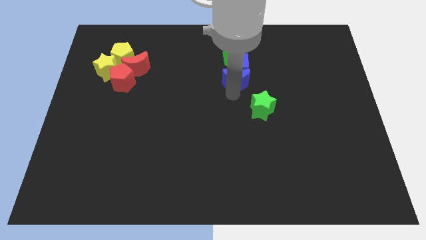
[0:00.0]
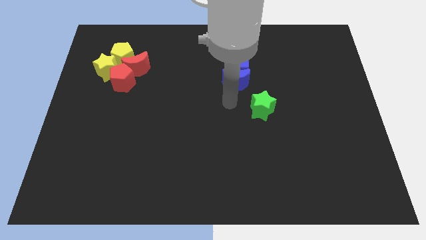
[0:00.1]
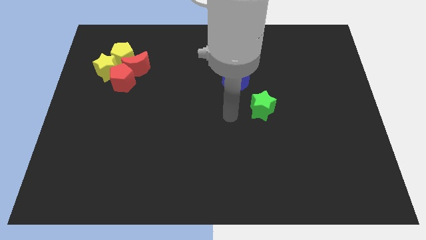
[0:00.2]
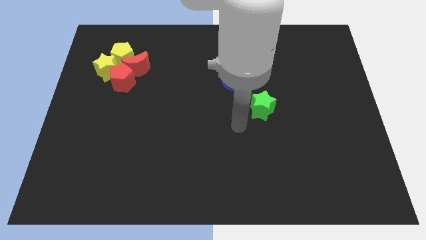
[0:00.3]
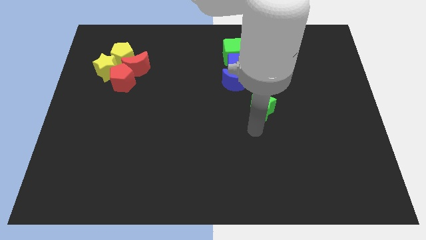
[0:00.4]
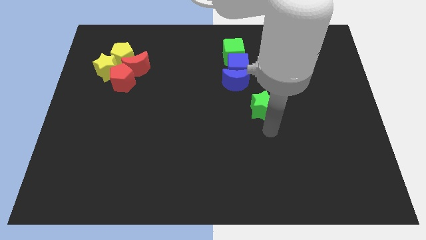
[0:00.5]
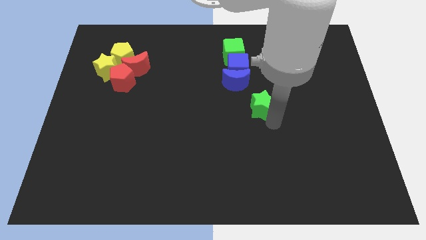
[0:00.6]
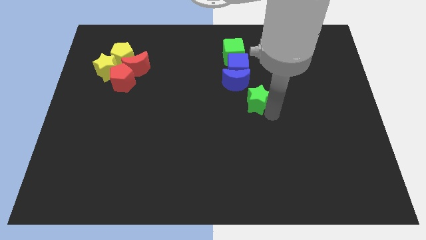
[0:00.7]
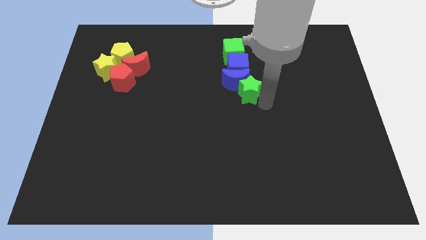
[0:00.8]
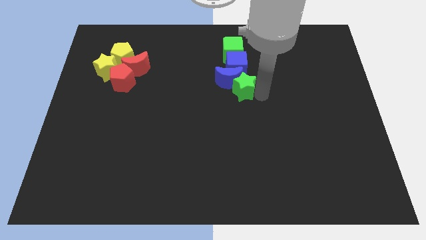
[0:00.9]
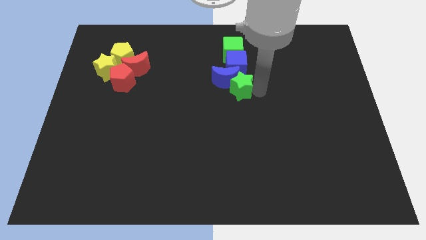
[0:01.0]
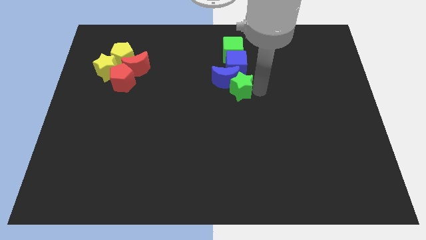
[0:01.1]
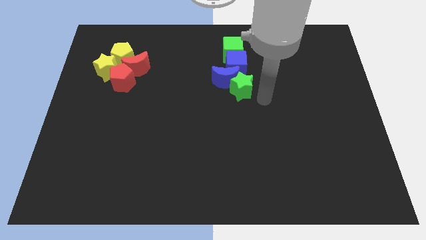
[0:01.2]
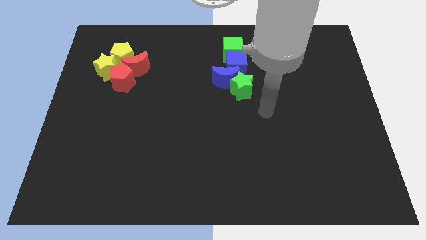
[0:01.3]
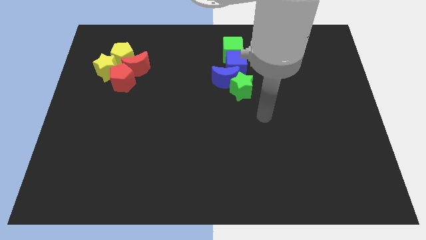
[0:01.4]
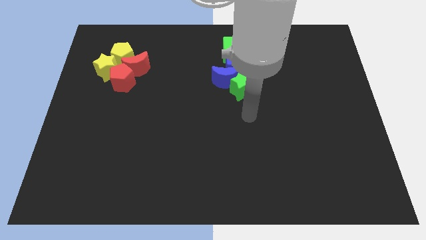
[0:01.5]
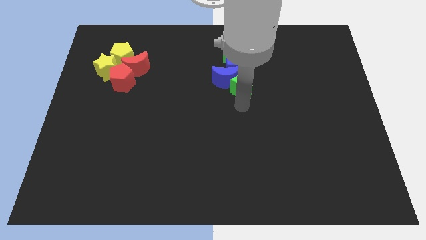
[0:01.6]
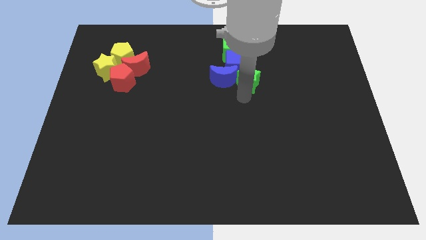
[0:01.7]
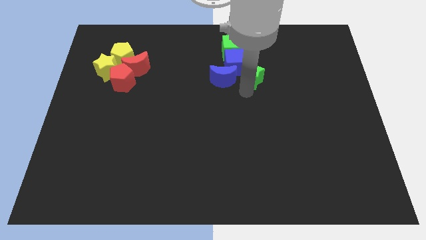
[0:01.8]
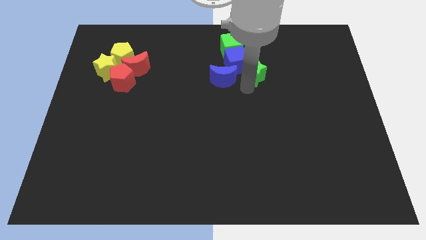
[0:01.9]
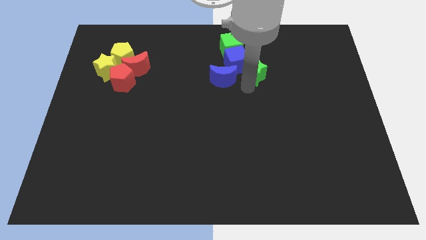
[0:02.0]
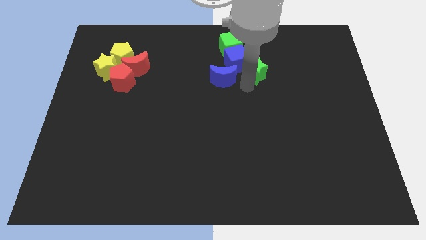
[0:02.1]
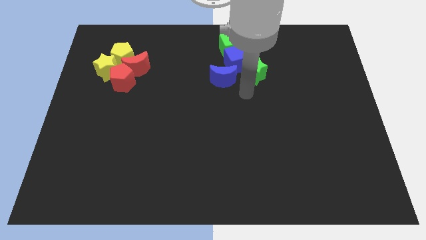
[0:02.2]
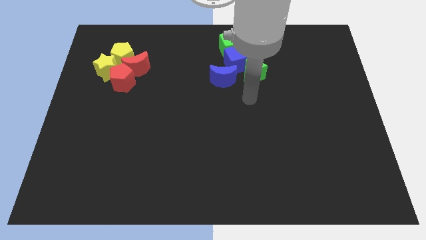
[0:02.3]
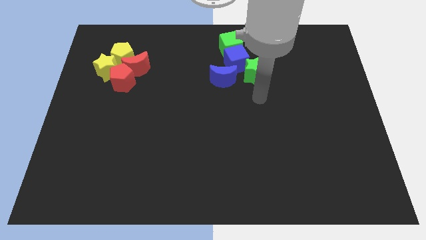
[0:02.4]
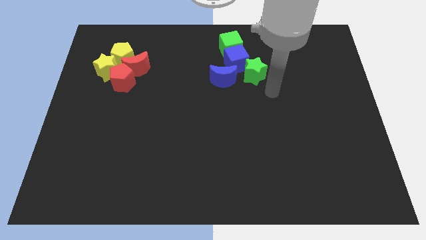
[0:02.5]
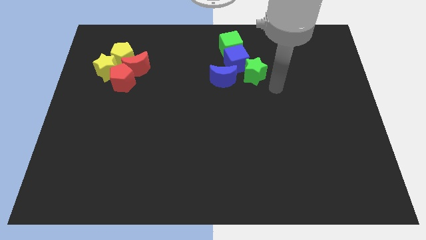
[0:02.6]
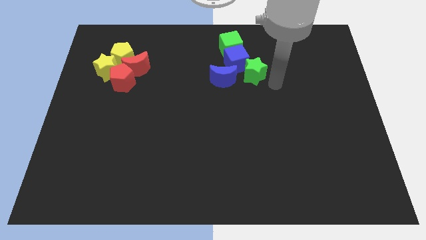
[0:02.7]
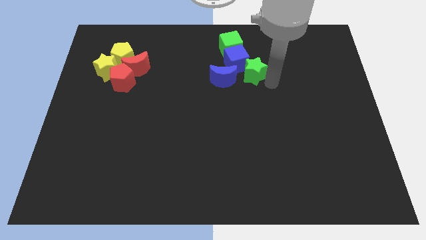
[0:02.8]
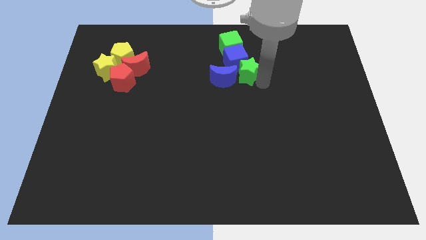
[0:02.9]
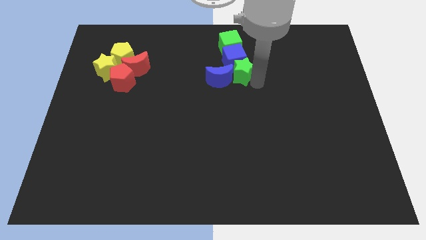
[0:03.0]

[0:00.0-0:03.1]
push the green star to the bottom right of blue cube

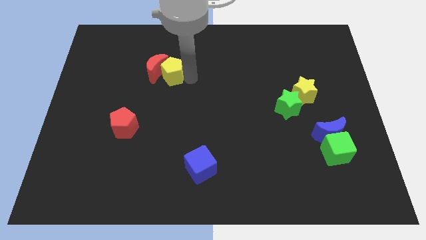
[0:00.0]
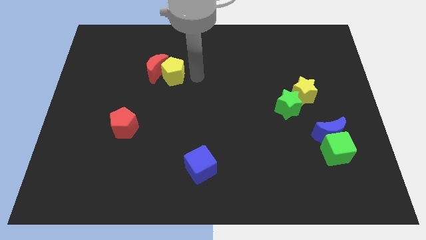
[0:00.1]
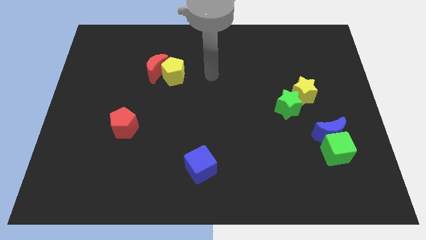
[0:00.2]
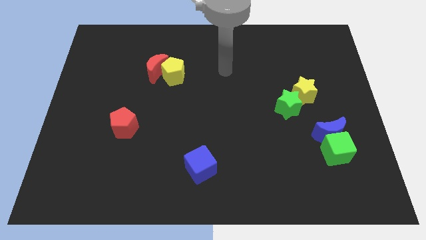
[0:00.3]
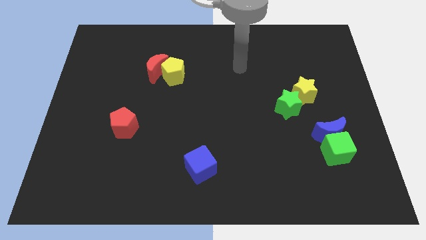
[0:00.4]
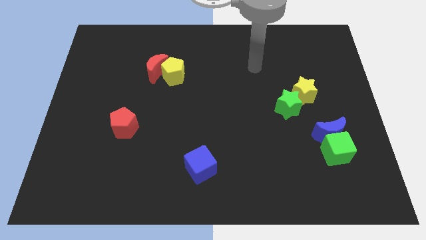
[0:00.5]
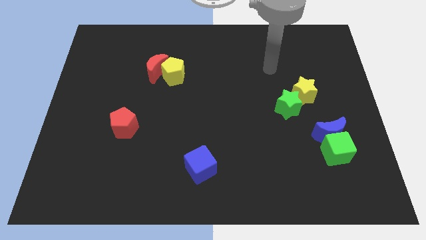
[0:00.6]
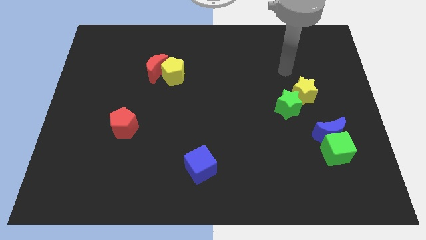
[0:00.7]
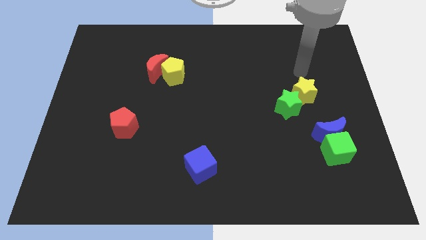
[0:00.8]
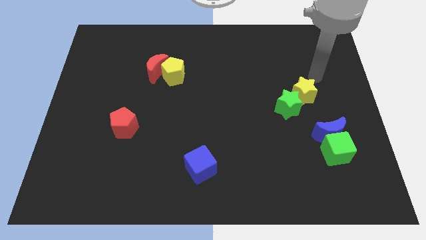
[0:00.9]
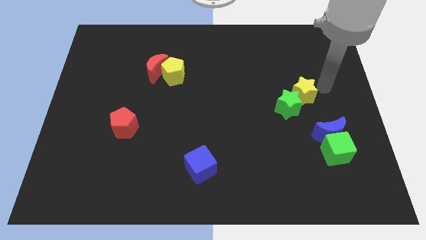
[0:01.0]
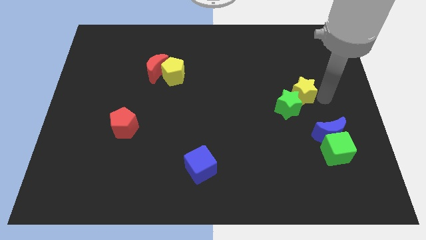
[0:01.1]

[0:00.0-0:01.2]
move your arm away from the yellow pentagon

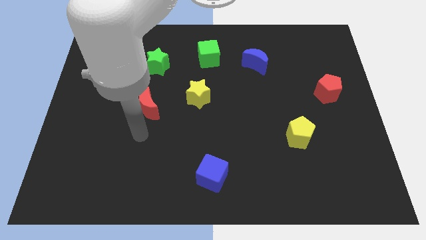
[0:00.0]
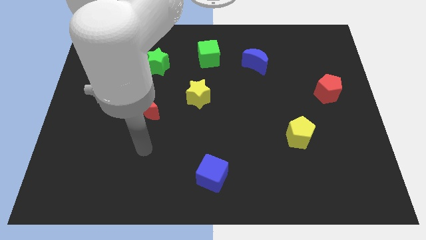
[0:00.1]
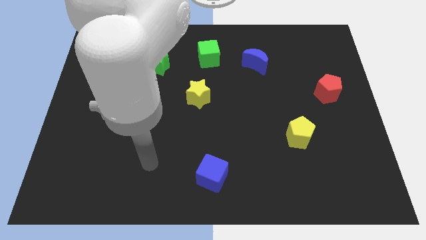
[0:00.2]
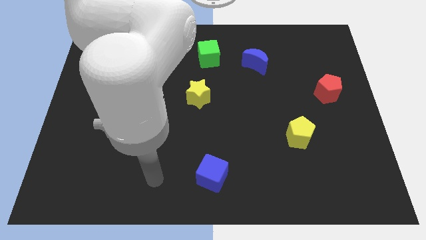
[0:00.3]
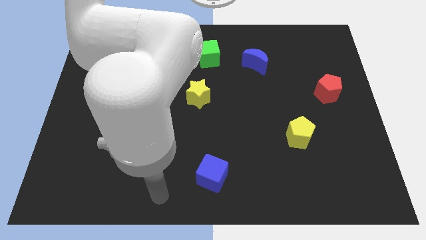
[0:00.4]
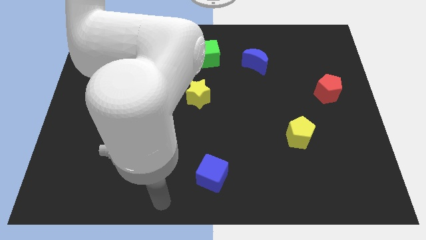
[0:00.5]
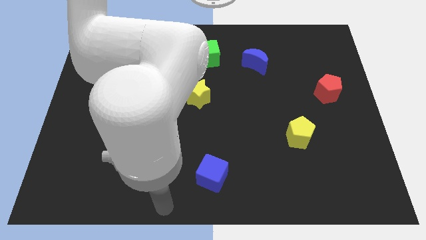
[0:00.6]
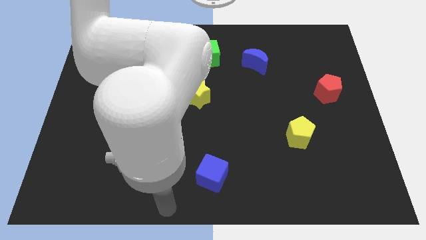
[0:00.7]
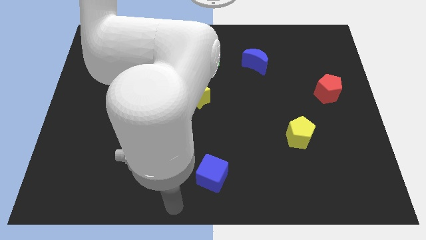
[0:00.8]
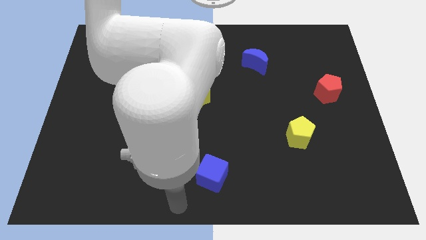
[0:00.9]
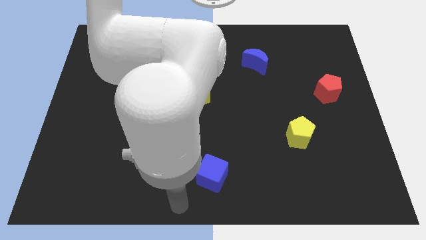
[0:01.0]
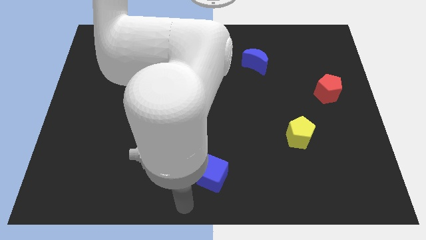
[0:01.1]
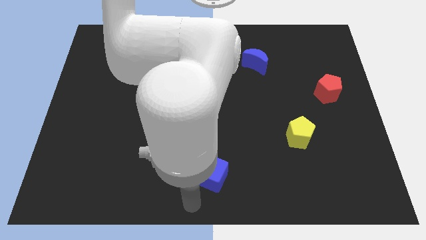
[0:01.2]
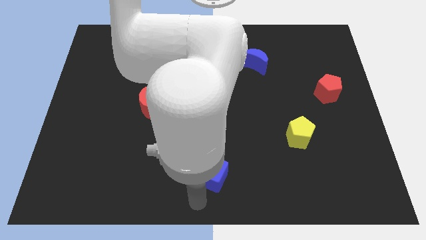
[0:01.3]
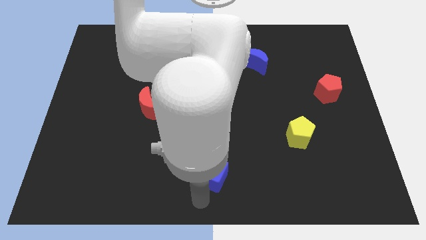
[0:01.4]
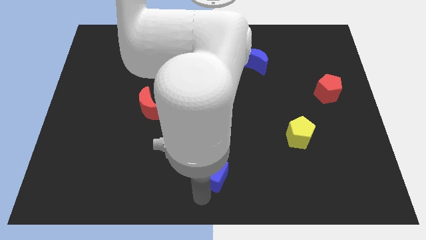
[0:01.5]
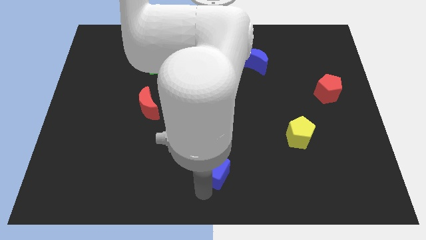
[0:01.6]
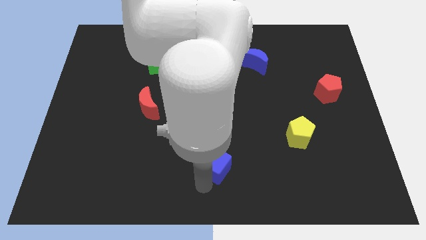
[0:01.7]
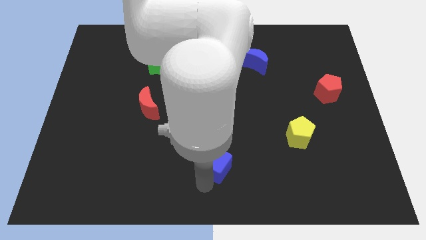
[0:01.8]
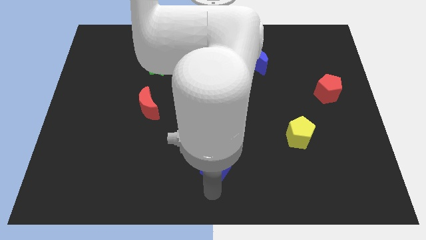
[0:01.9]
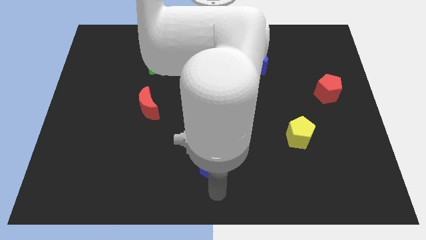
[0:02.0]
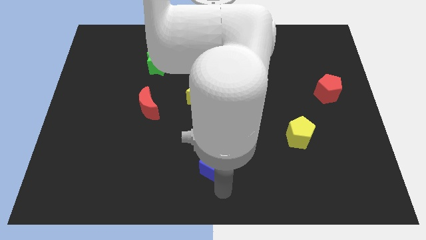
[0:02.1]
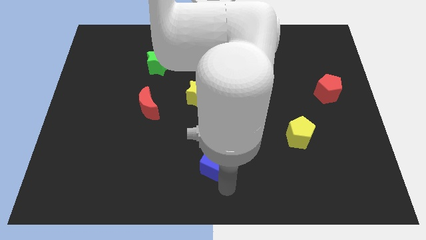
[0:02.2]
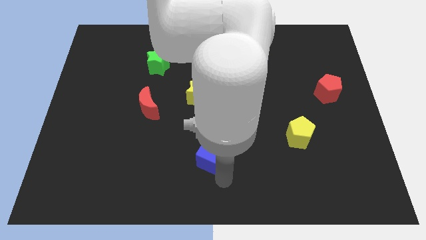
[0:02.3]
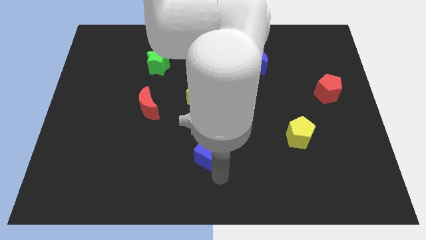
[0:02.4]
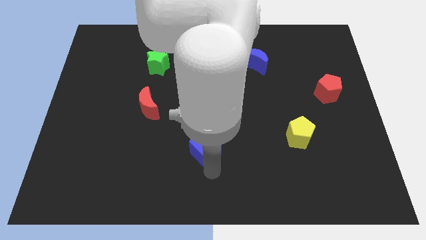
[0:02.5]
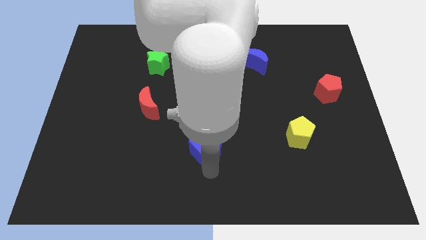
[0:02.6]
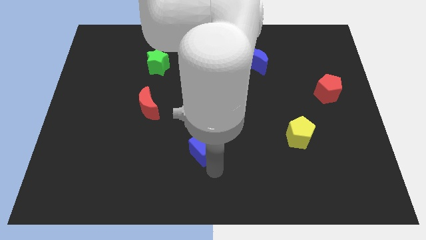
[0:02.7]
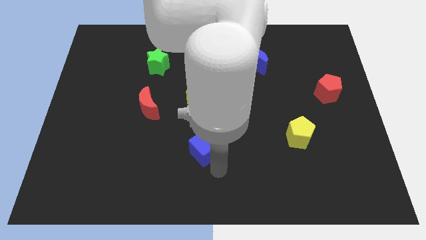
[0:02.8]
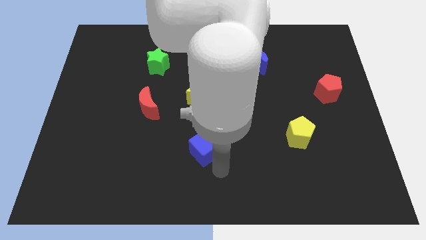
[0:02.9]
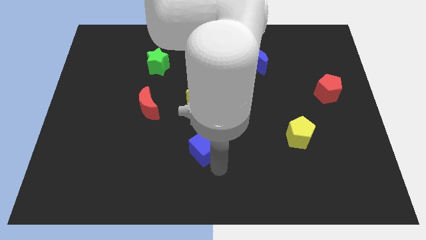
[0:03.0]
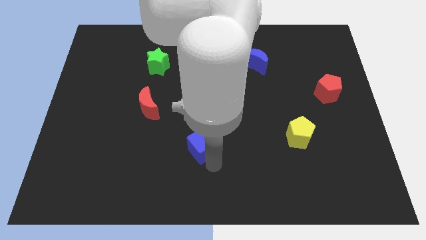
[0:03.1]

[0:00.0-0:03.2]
move the blue cube slightly to the top

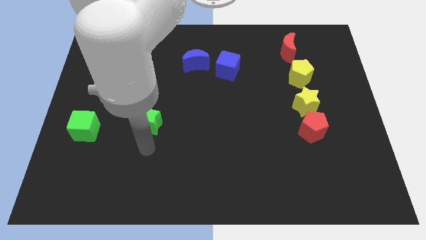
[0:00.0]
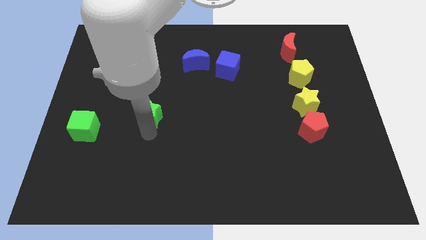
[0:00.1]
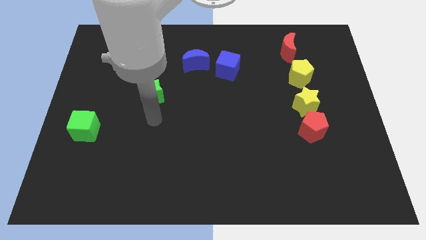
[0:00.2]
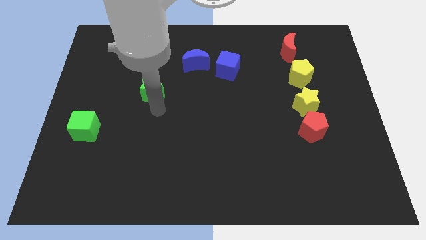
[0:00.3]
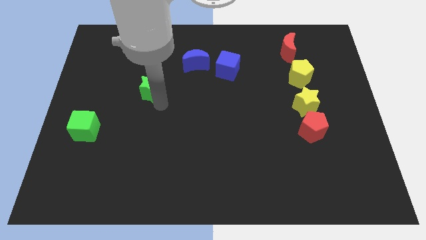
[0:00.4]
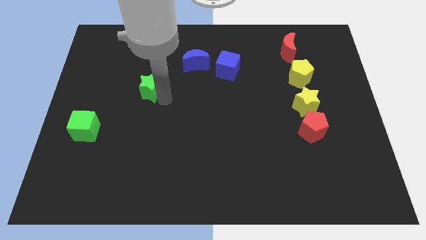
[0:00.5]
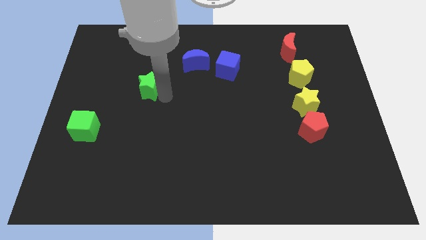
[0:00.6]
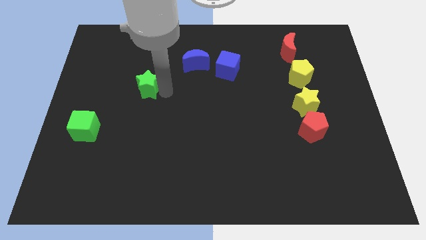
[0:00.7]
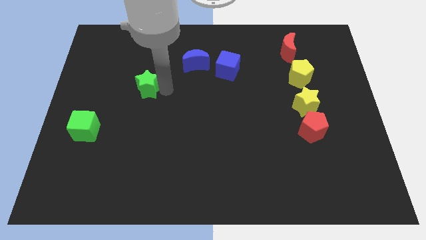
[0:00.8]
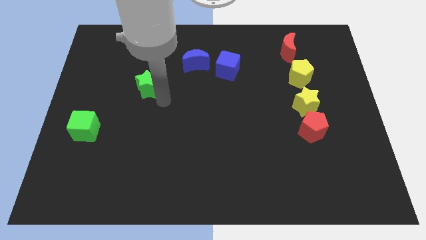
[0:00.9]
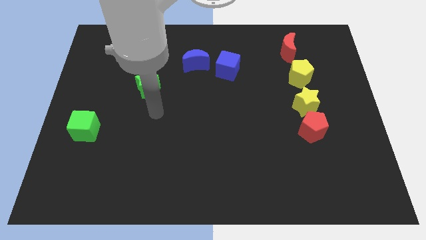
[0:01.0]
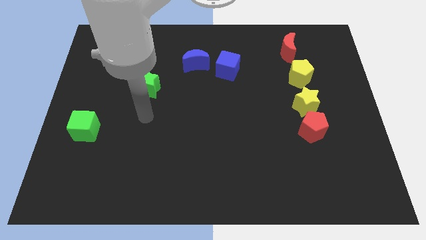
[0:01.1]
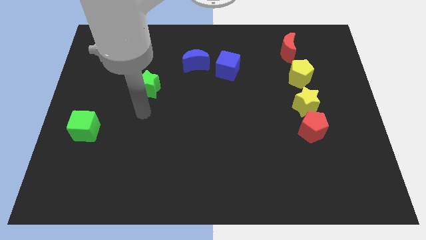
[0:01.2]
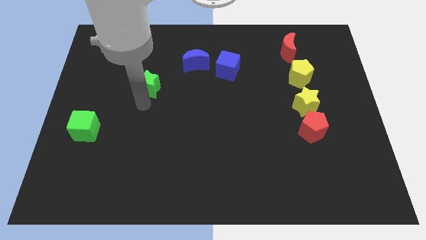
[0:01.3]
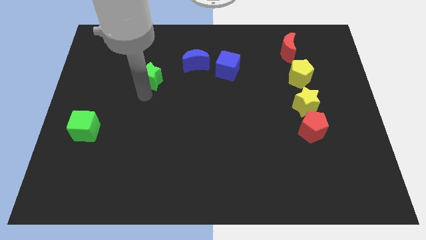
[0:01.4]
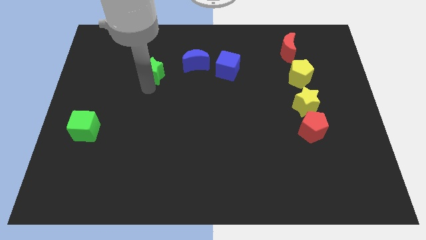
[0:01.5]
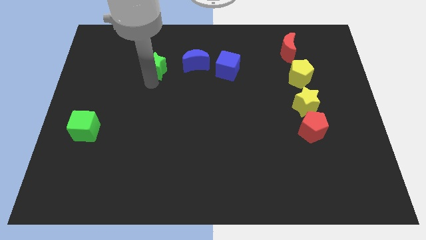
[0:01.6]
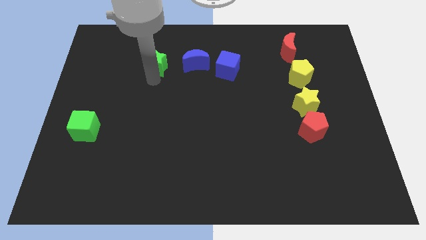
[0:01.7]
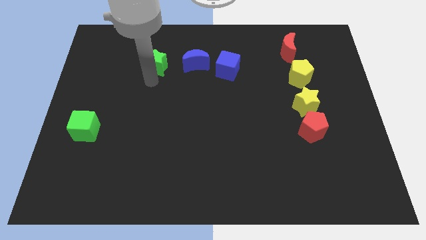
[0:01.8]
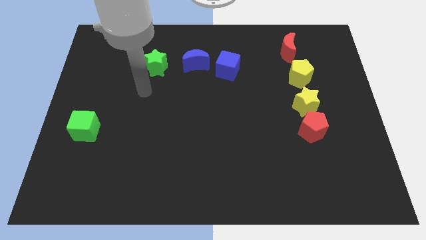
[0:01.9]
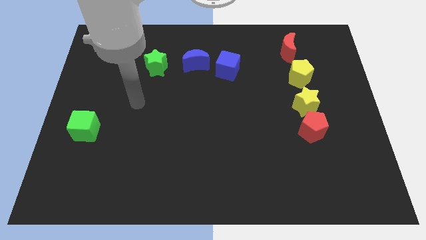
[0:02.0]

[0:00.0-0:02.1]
push the green star to the left of the blue moon
